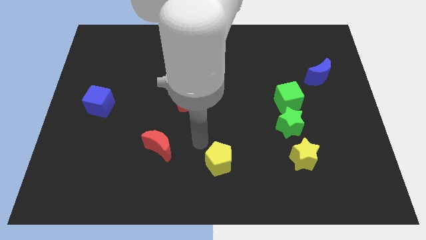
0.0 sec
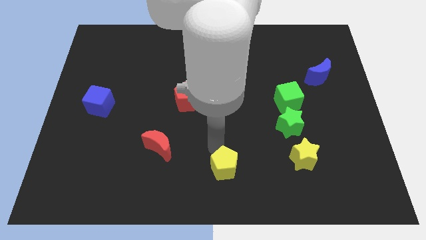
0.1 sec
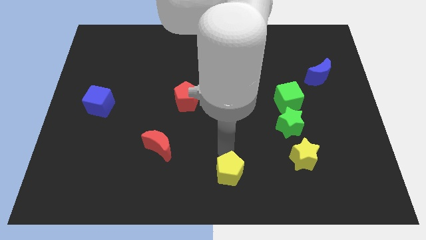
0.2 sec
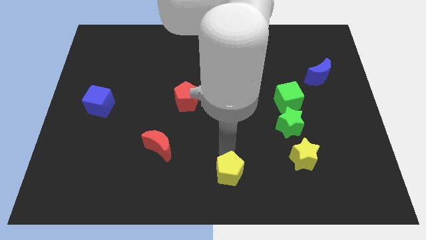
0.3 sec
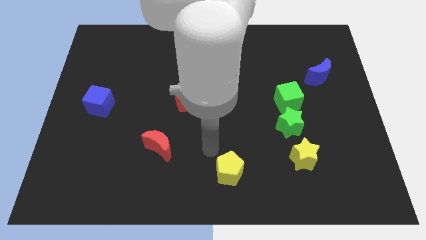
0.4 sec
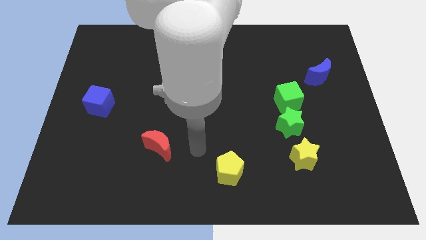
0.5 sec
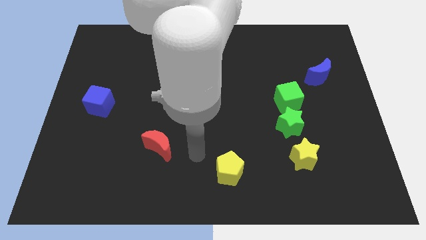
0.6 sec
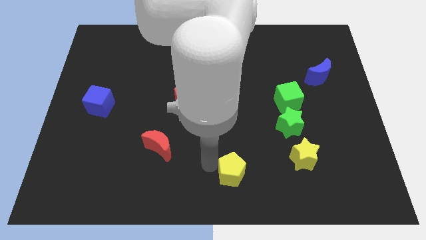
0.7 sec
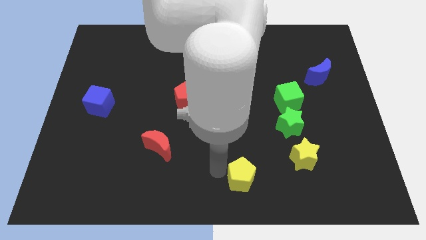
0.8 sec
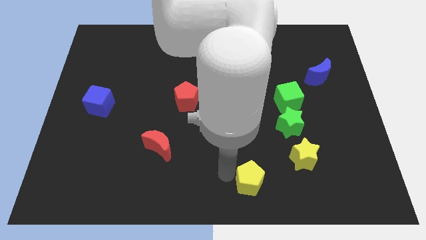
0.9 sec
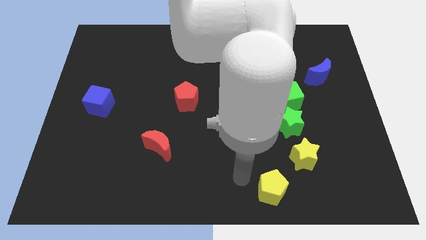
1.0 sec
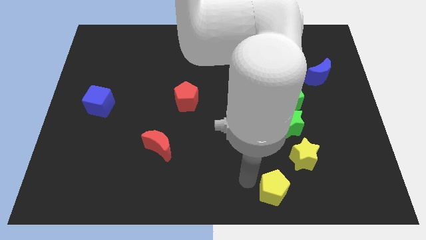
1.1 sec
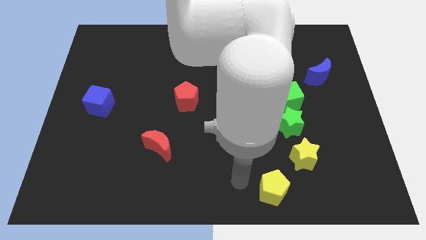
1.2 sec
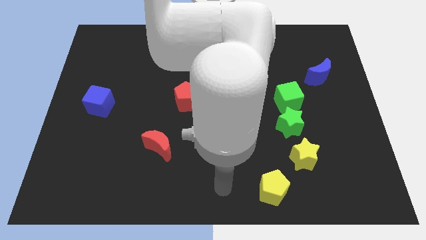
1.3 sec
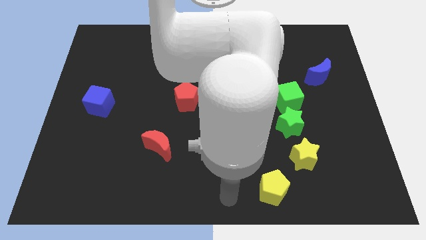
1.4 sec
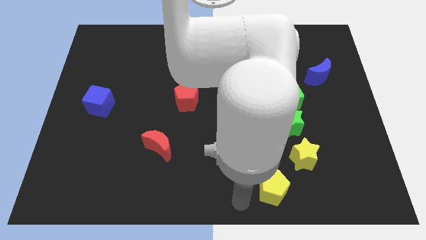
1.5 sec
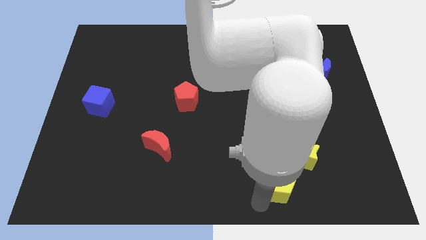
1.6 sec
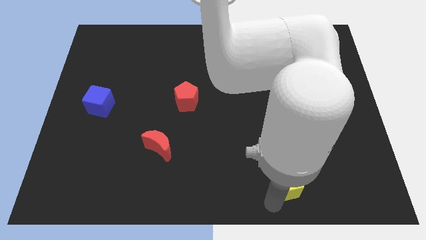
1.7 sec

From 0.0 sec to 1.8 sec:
place yellow pentagon below yellow star

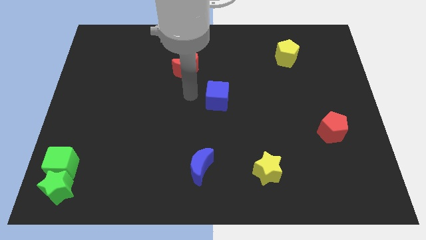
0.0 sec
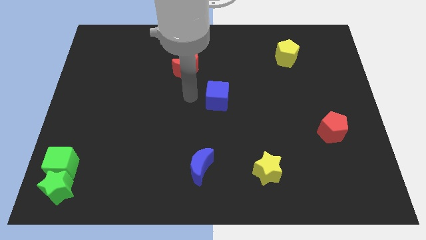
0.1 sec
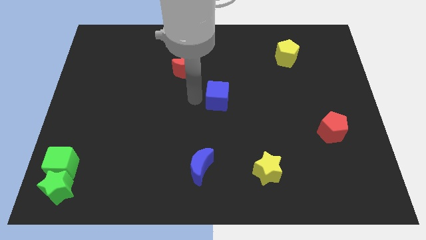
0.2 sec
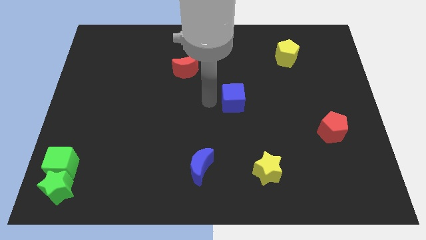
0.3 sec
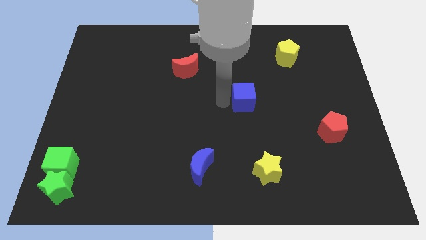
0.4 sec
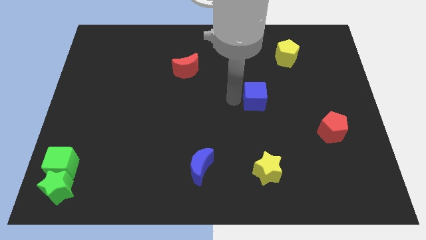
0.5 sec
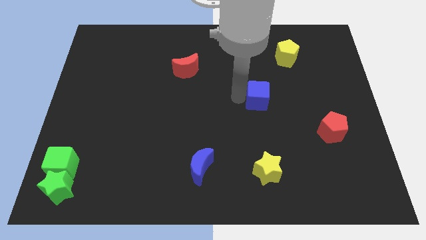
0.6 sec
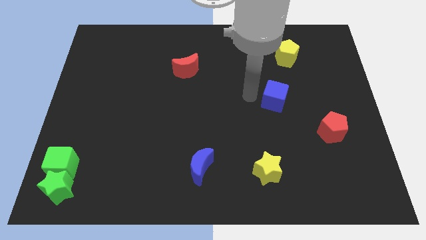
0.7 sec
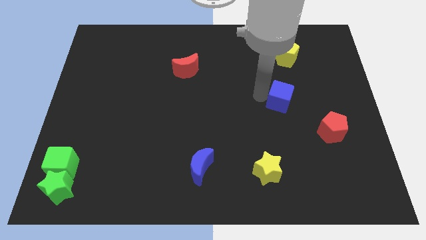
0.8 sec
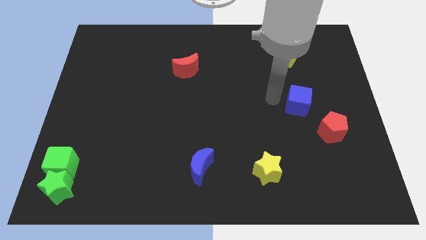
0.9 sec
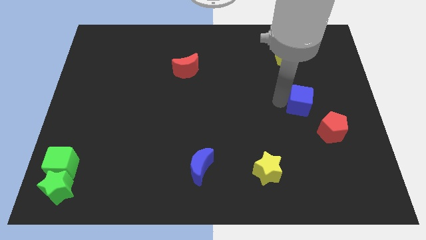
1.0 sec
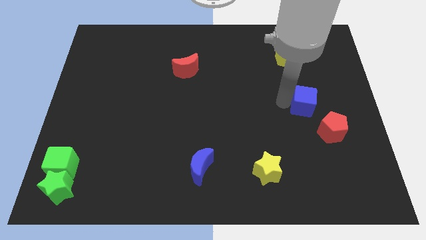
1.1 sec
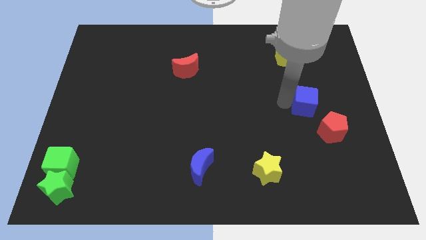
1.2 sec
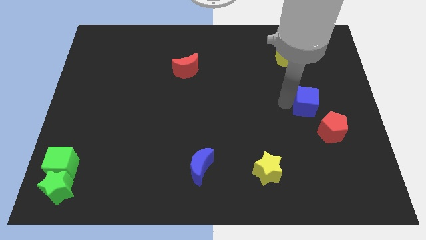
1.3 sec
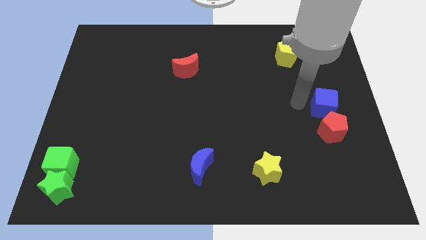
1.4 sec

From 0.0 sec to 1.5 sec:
place the blue cube above the red pentagon

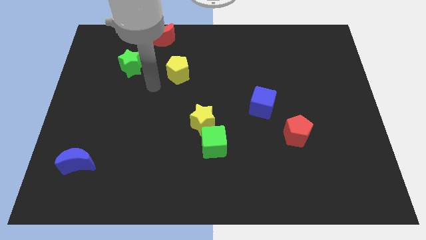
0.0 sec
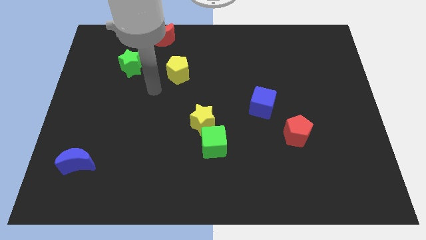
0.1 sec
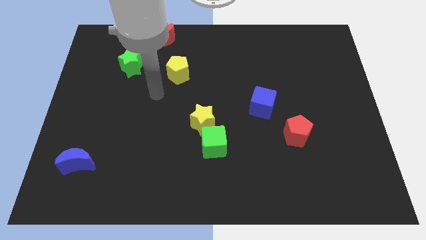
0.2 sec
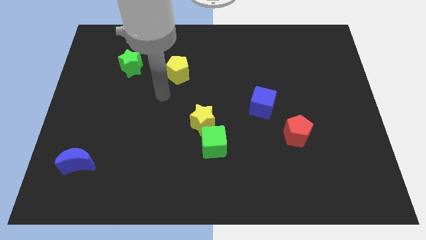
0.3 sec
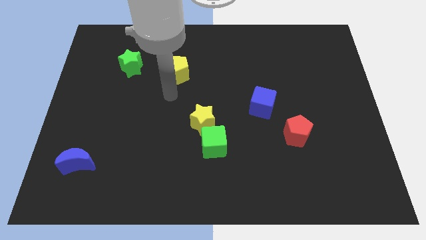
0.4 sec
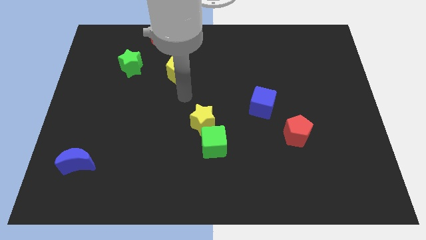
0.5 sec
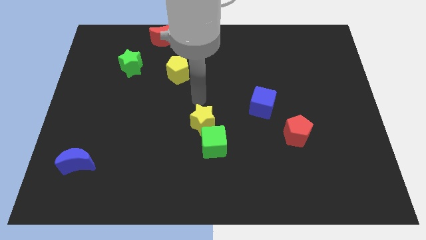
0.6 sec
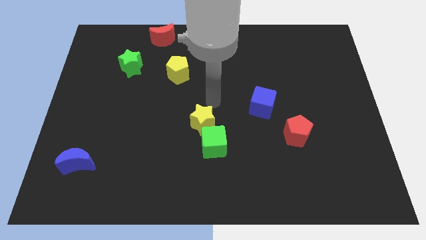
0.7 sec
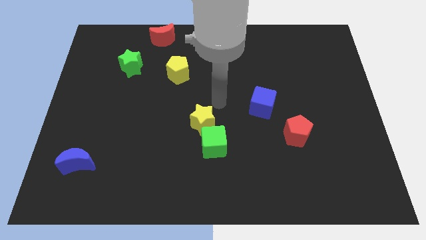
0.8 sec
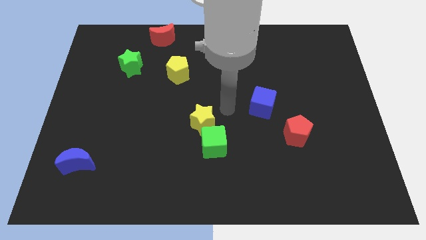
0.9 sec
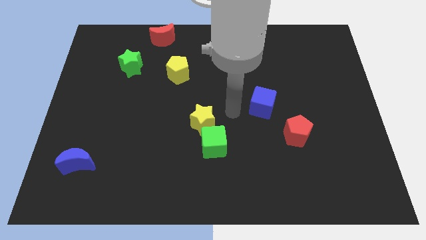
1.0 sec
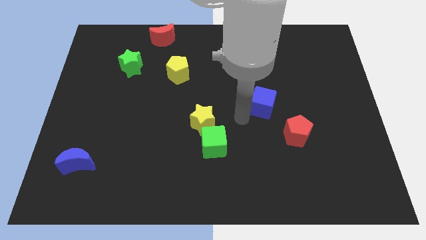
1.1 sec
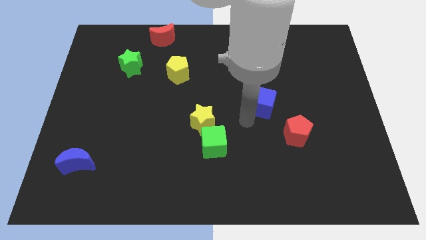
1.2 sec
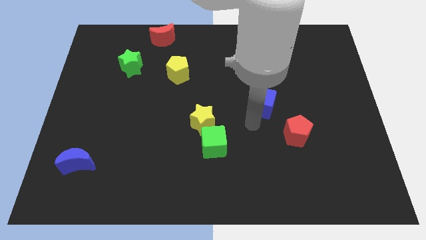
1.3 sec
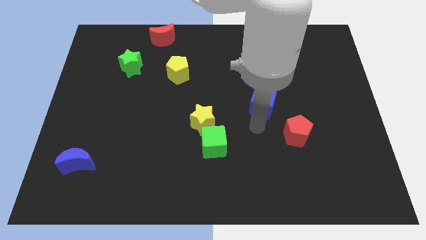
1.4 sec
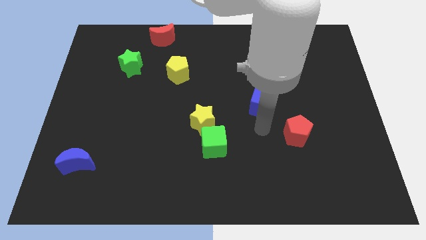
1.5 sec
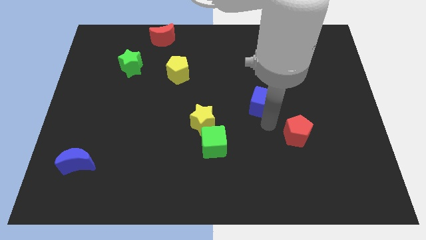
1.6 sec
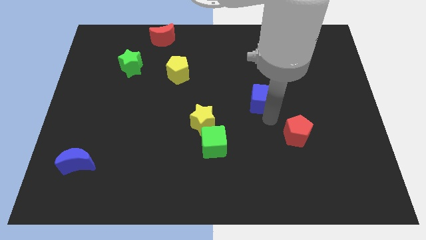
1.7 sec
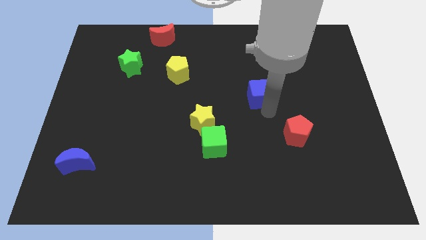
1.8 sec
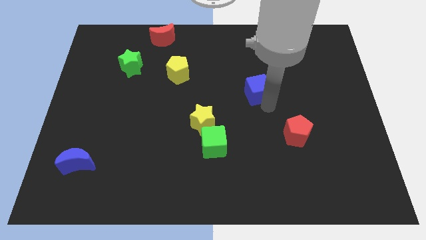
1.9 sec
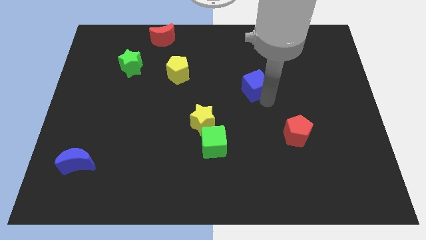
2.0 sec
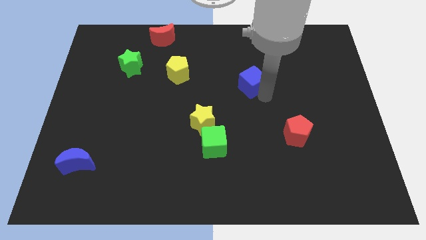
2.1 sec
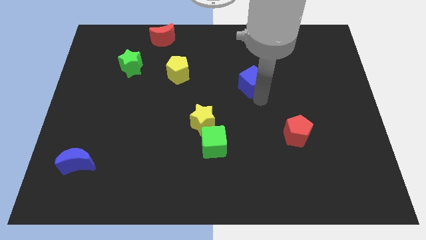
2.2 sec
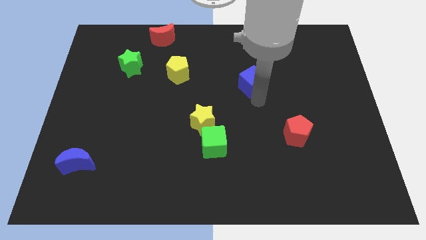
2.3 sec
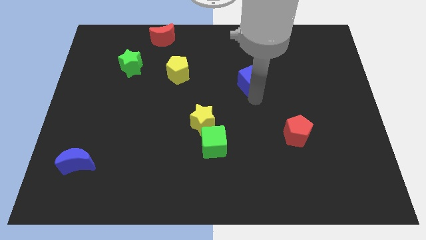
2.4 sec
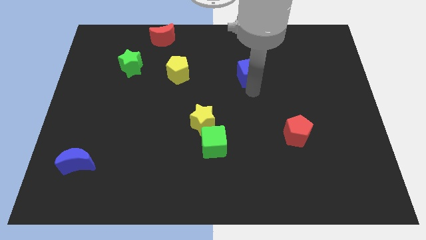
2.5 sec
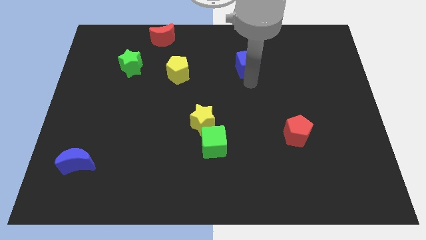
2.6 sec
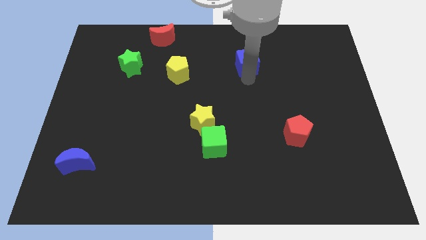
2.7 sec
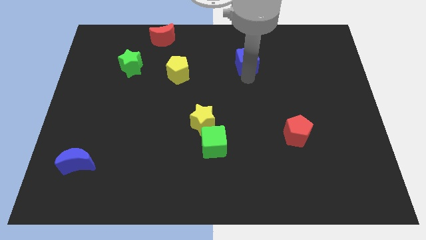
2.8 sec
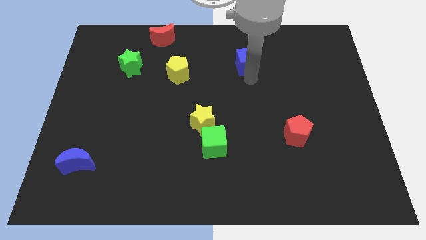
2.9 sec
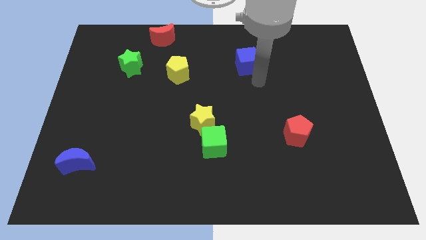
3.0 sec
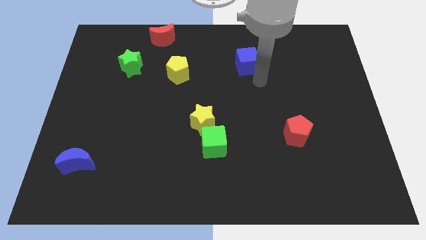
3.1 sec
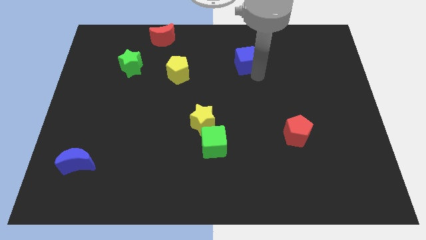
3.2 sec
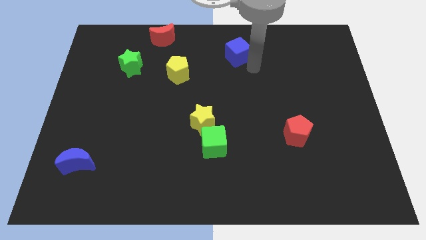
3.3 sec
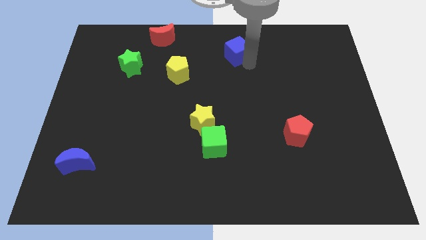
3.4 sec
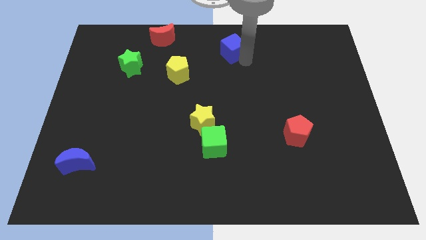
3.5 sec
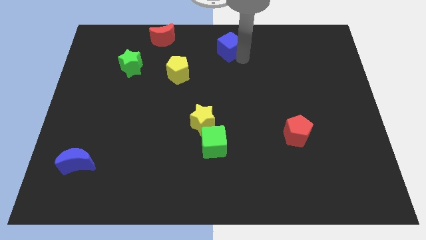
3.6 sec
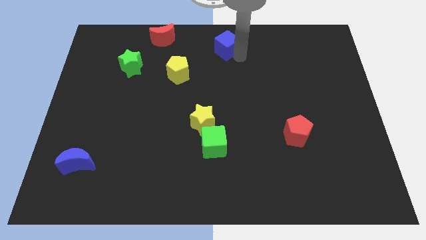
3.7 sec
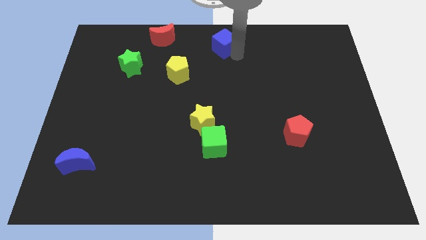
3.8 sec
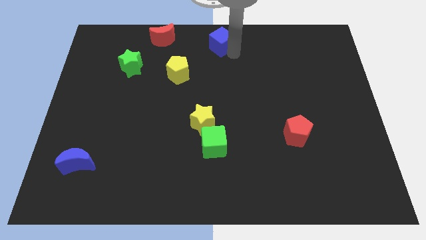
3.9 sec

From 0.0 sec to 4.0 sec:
push the blue cube to the top center of the board

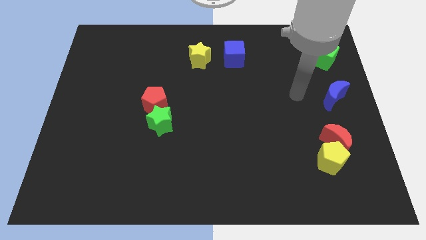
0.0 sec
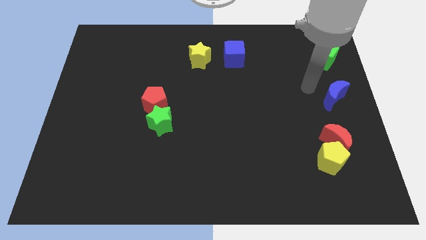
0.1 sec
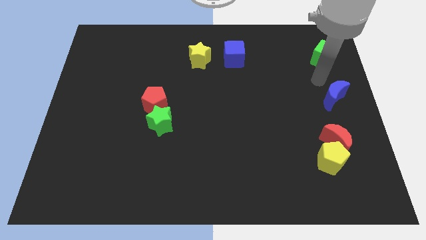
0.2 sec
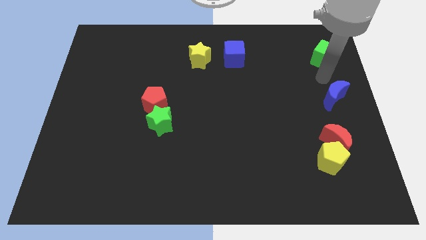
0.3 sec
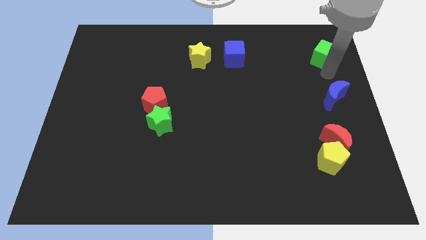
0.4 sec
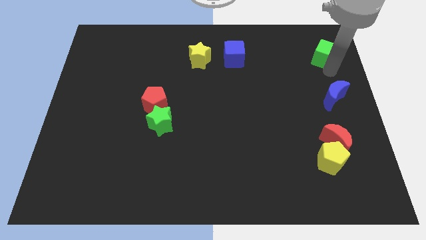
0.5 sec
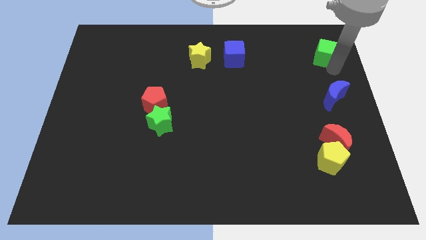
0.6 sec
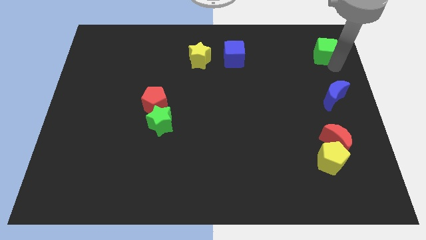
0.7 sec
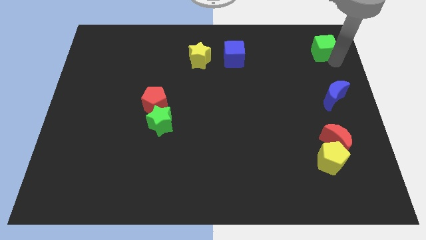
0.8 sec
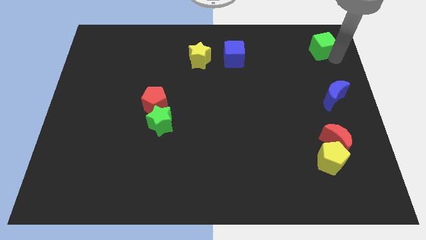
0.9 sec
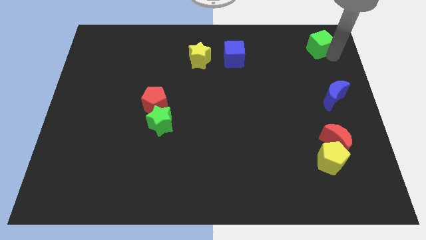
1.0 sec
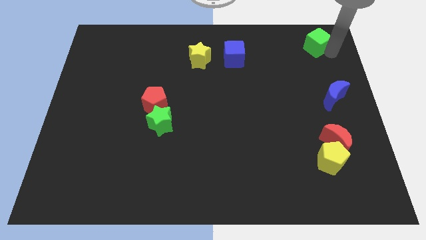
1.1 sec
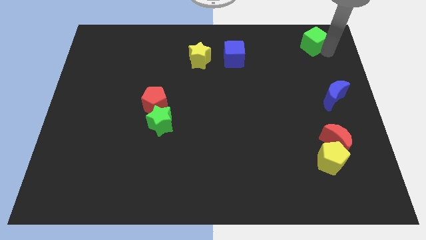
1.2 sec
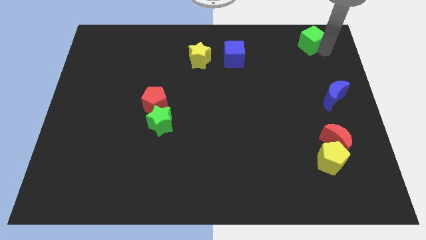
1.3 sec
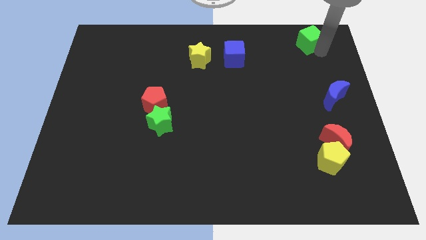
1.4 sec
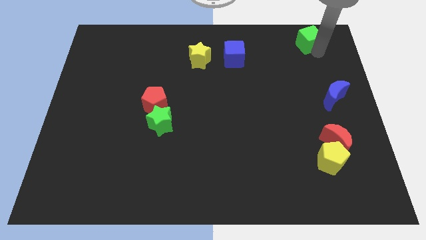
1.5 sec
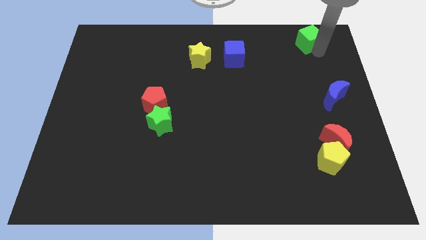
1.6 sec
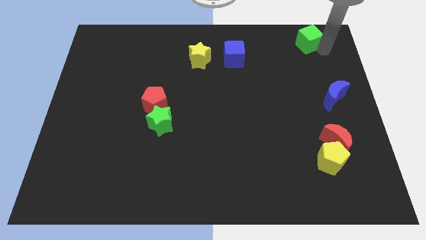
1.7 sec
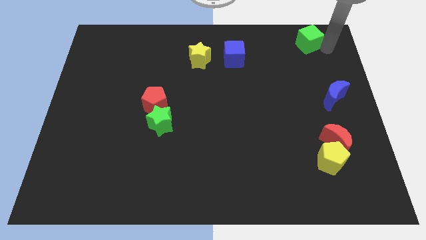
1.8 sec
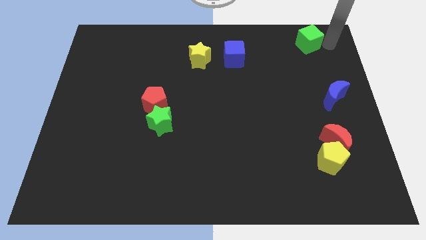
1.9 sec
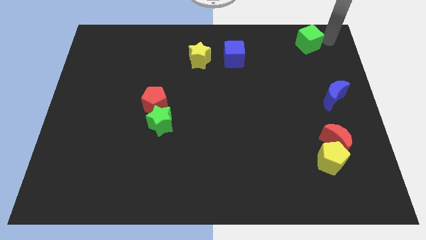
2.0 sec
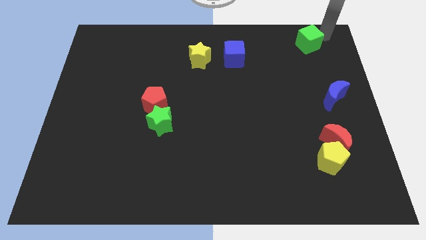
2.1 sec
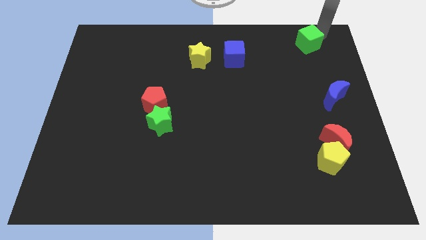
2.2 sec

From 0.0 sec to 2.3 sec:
push the green cube towards top right side
